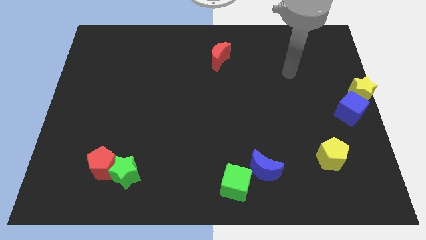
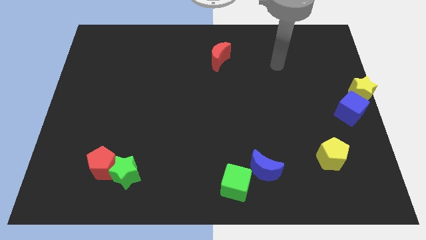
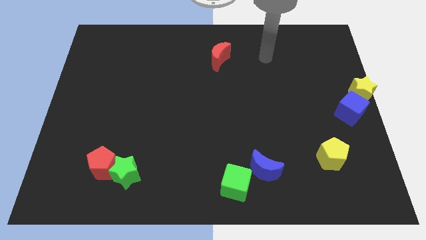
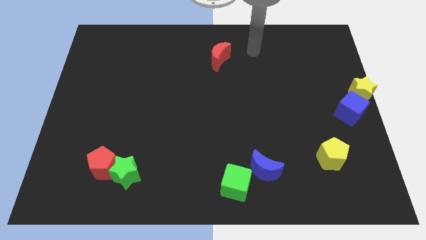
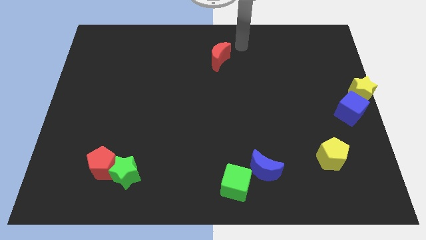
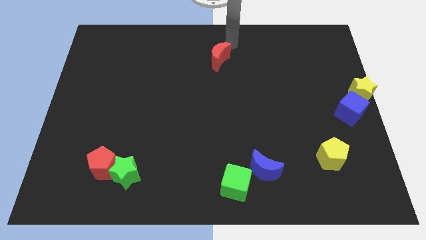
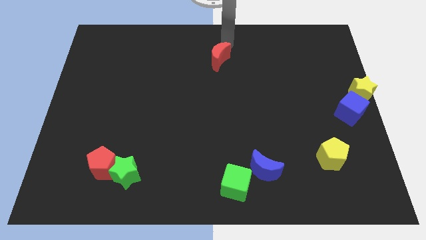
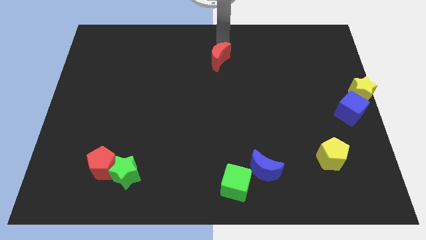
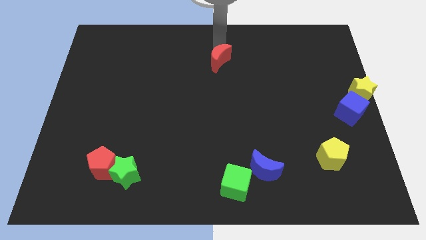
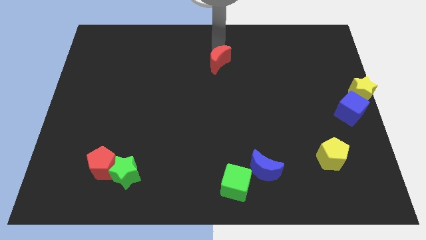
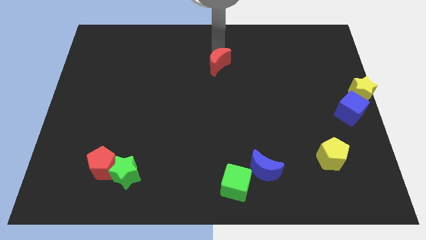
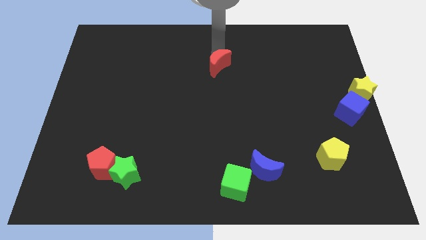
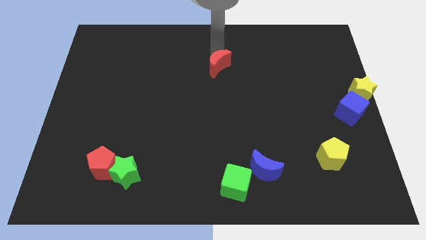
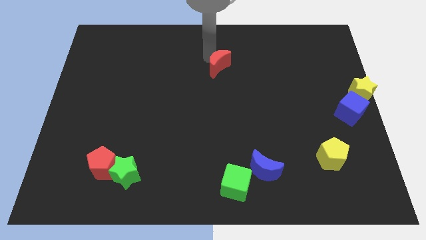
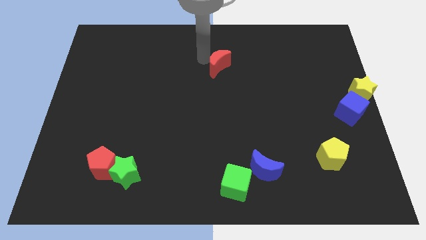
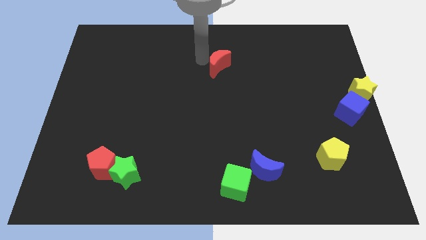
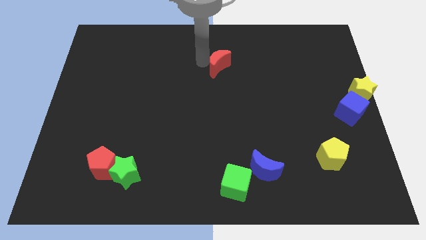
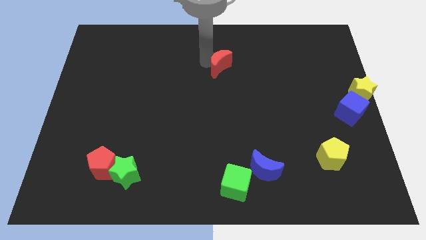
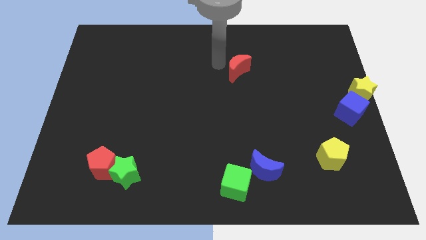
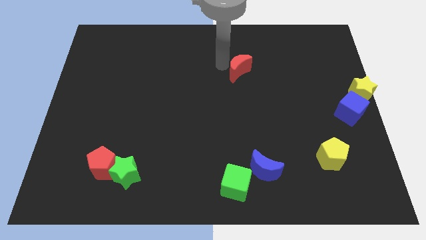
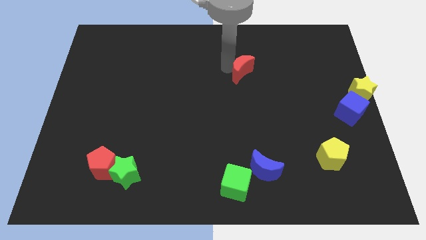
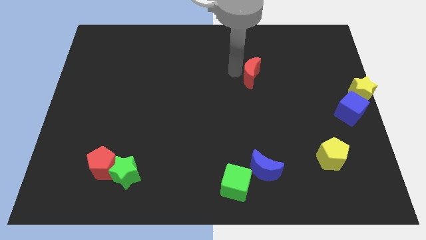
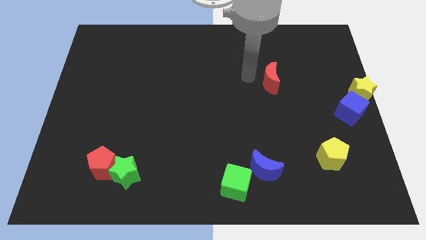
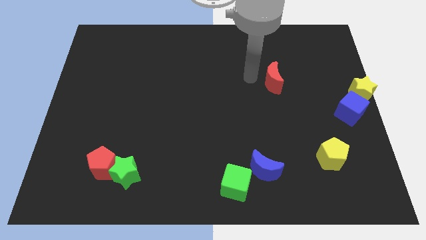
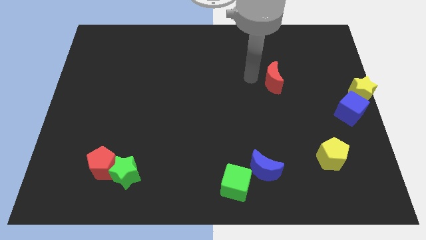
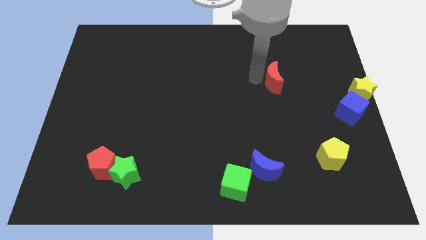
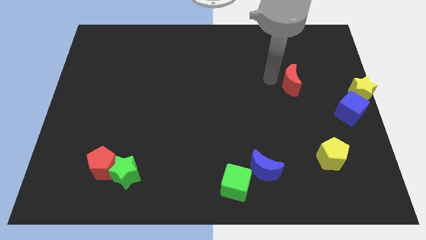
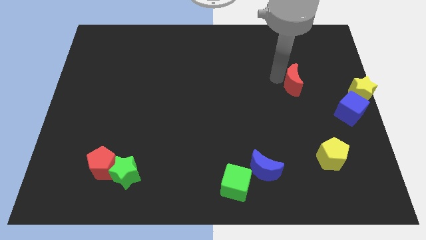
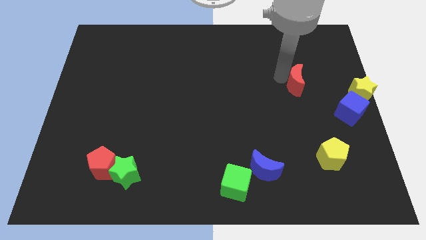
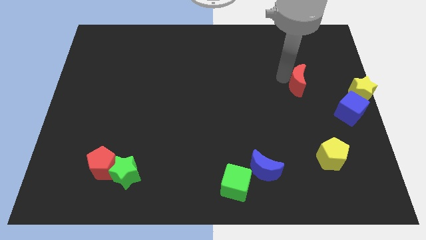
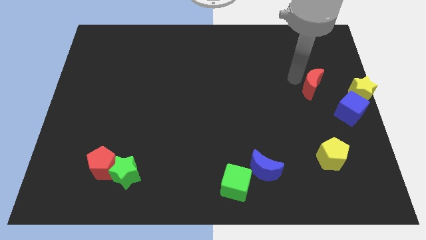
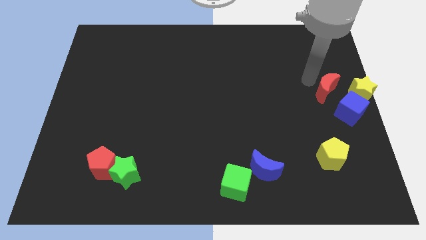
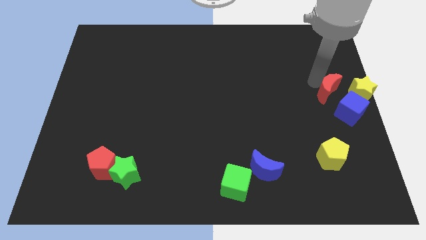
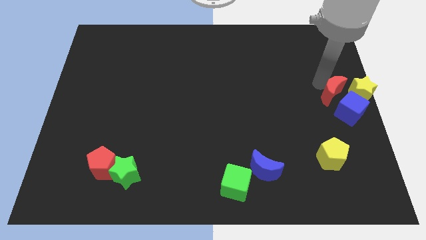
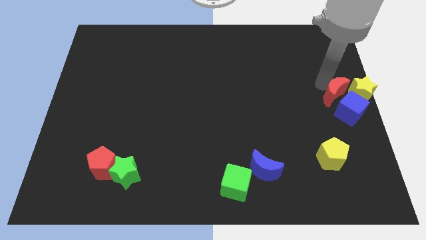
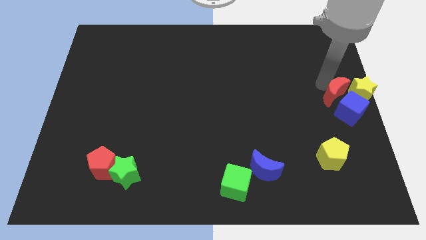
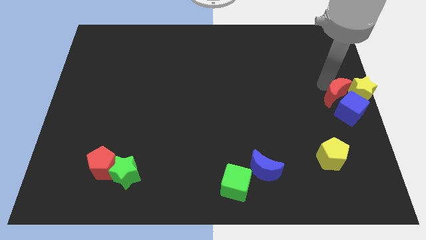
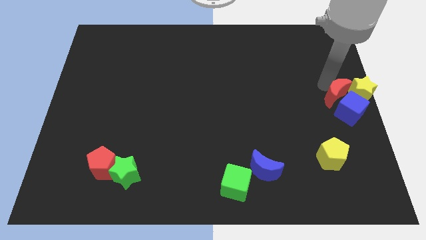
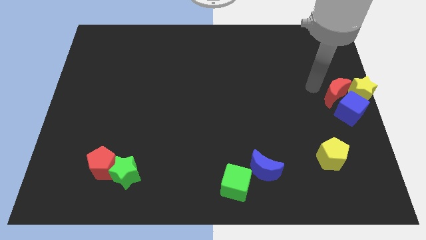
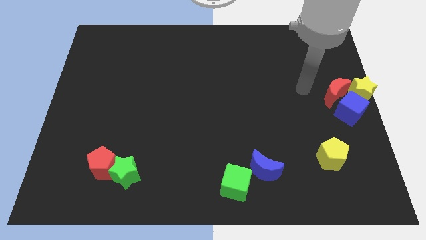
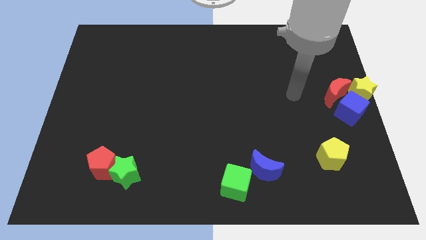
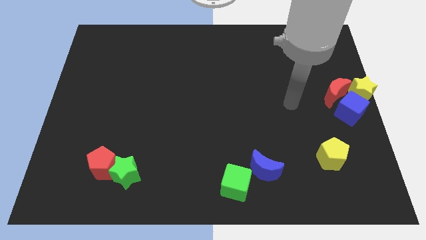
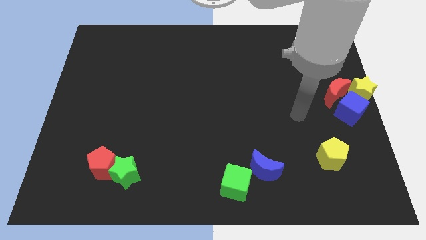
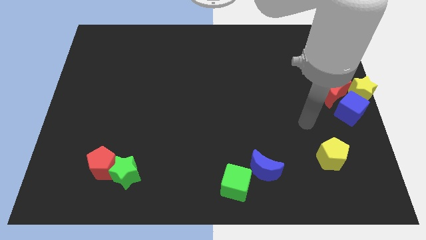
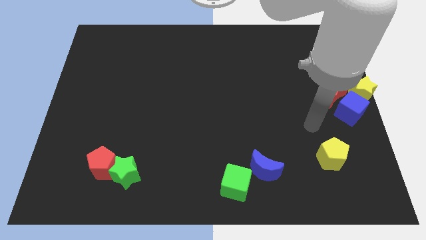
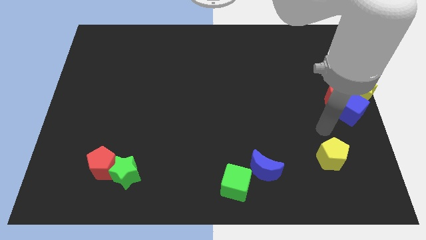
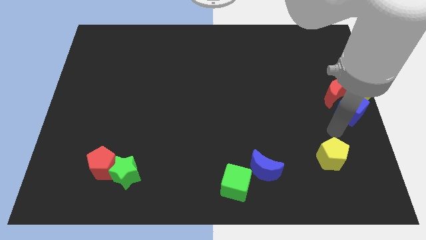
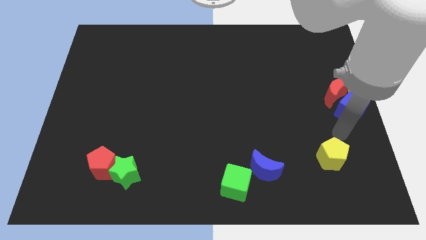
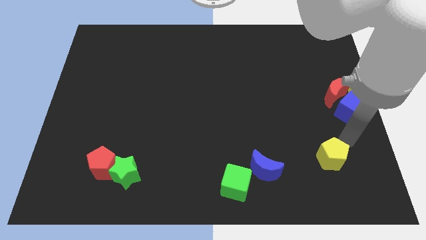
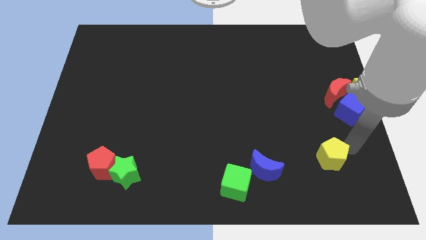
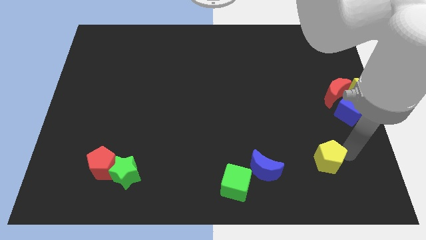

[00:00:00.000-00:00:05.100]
move the red crescent into the blue cube and yellow star

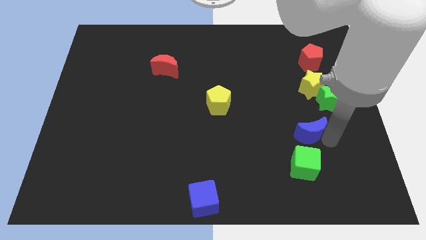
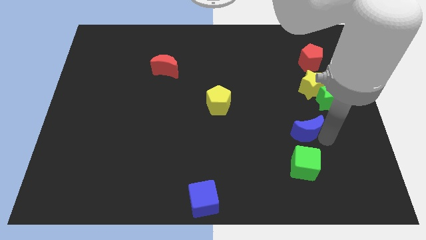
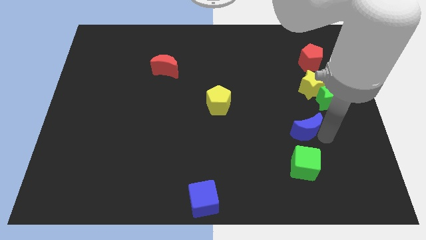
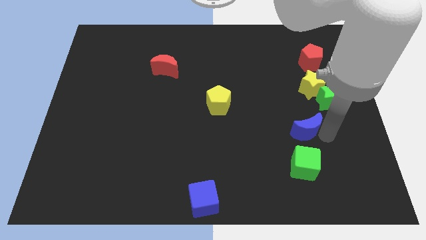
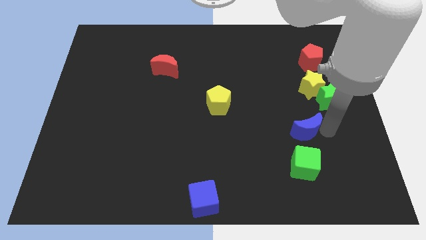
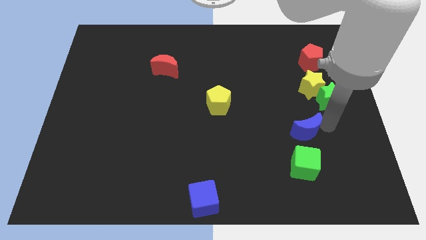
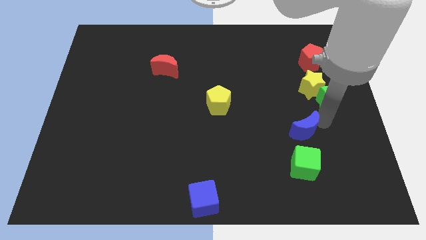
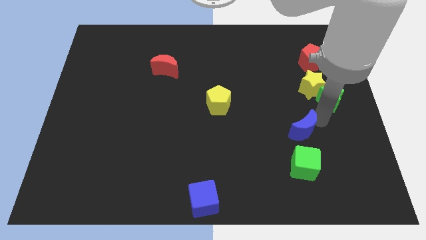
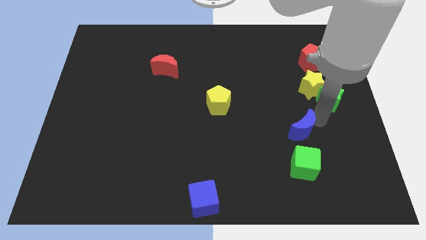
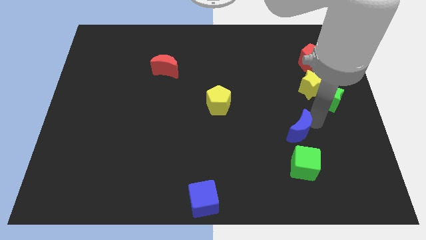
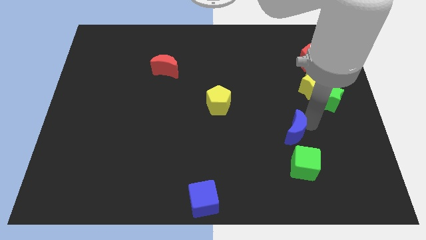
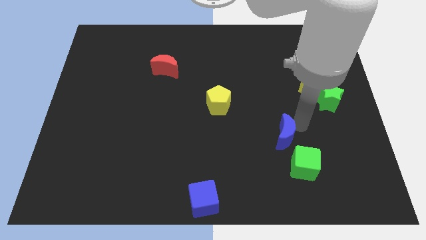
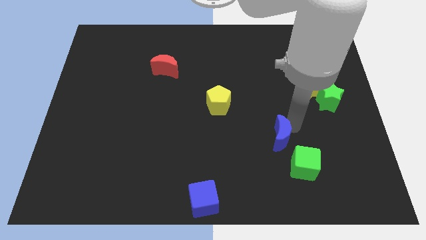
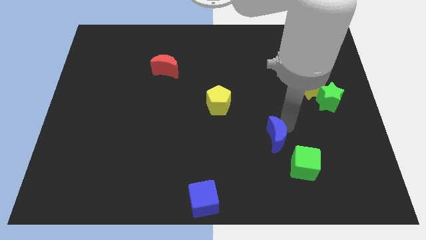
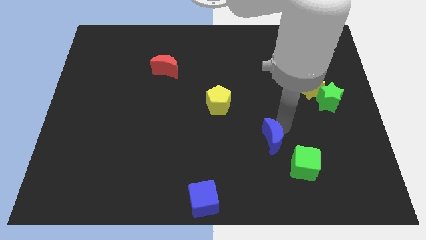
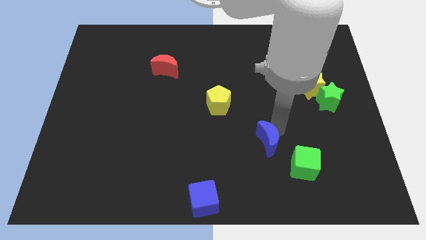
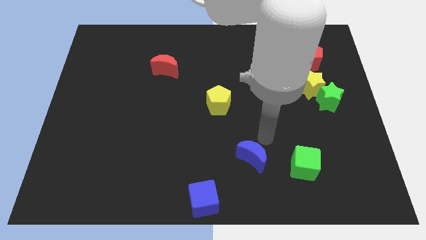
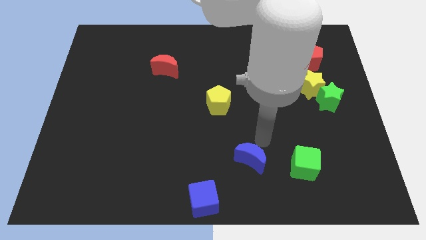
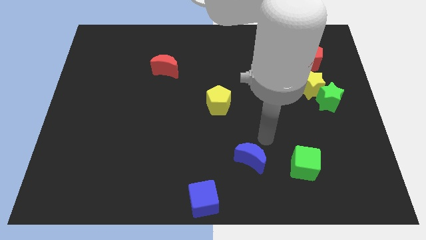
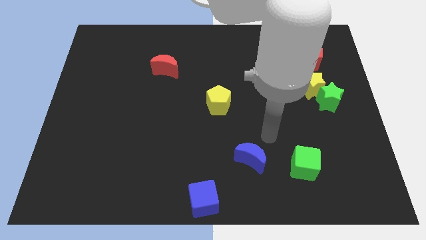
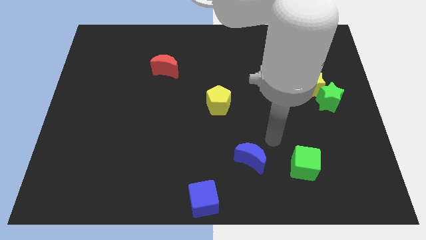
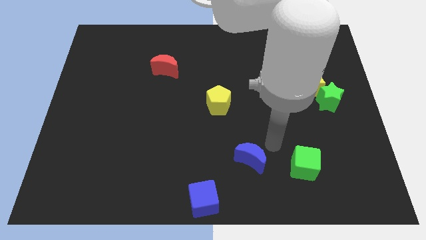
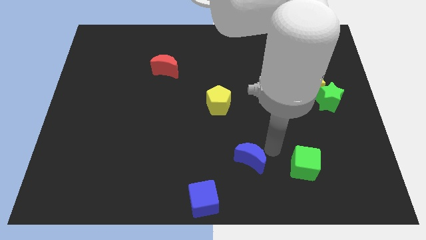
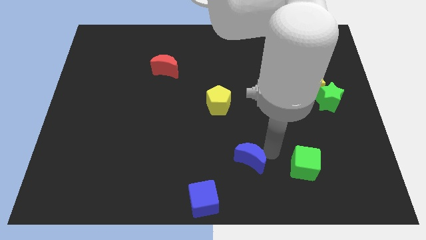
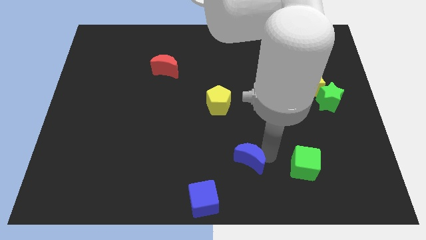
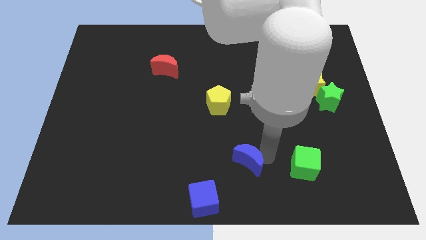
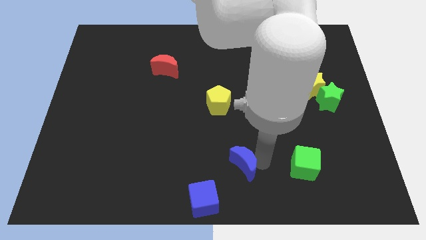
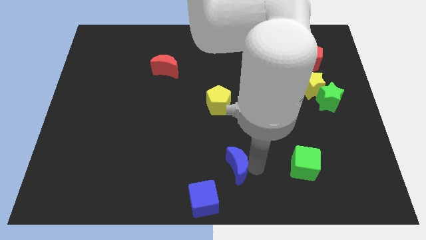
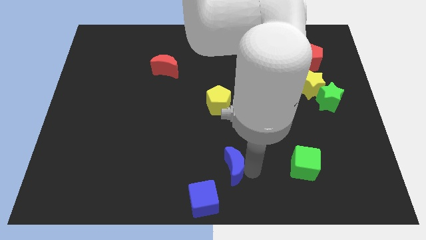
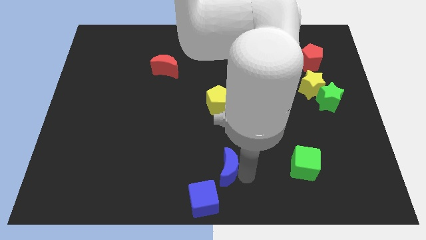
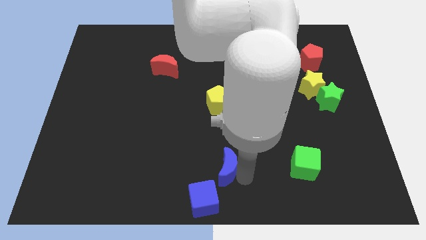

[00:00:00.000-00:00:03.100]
push blue crescent towards the top right of the blue cube

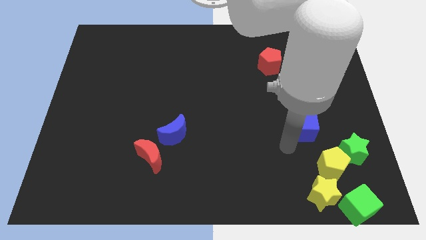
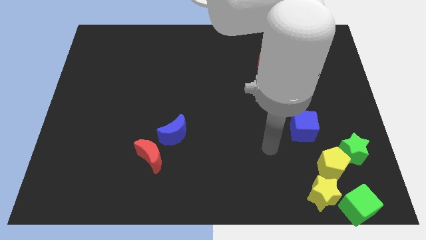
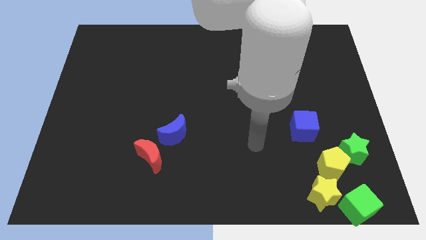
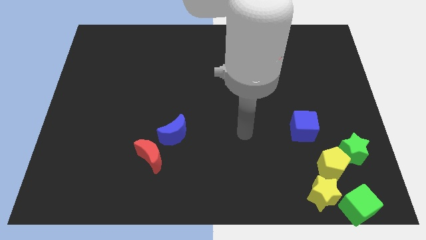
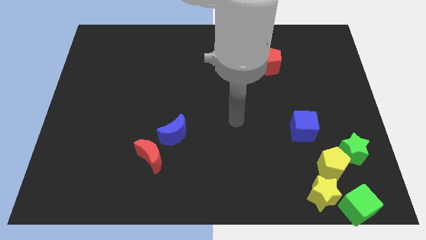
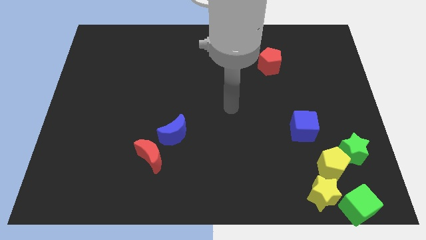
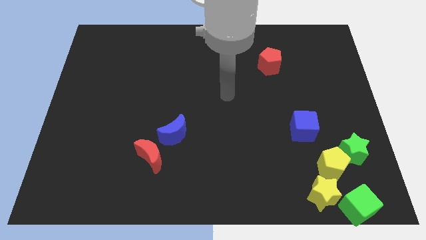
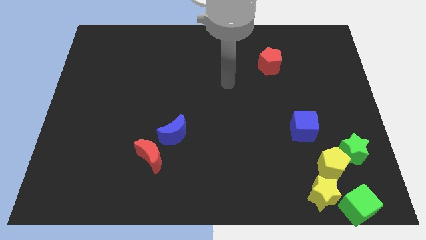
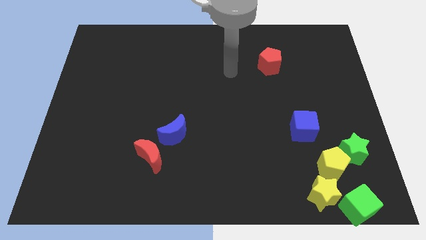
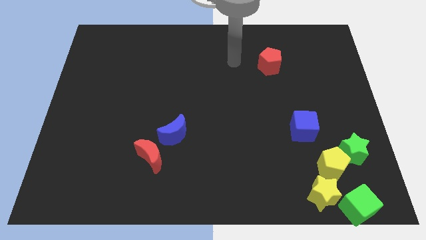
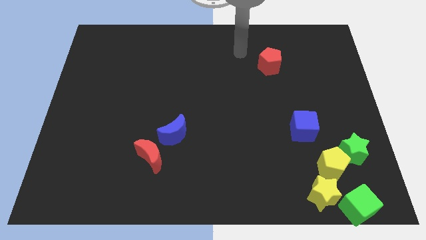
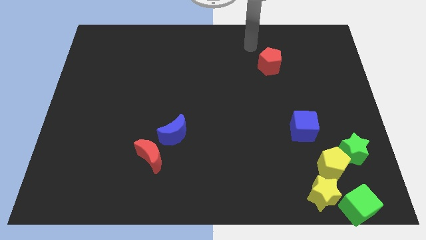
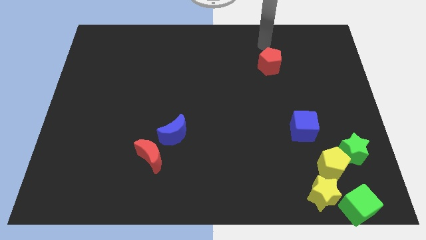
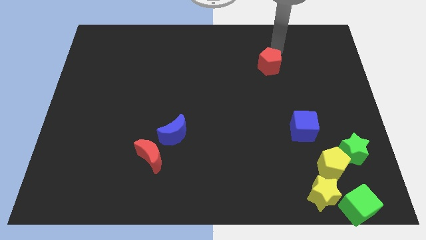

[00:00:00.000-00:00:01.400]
point your arm at the top of the red pentagon
